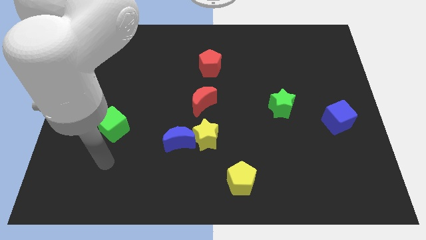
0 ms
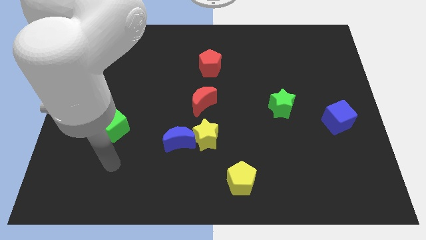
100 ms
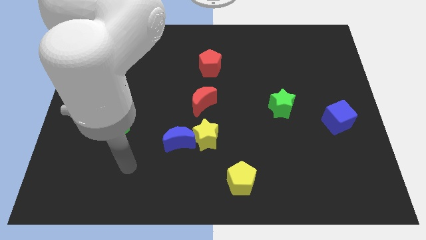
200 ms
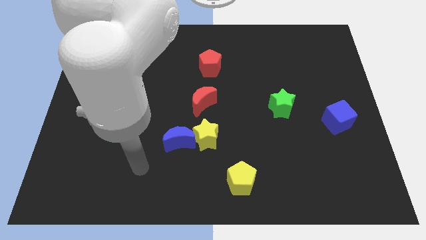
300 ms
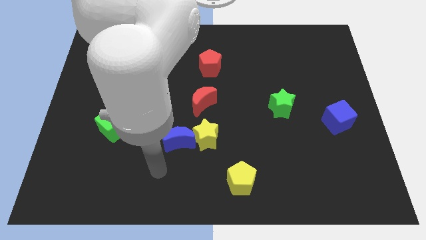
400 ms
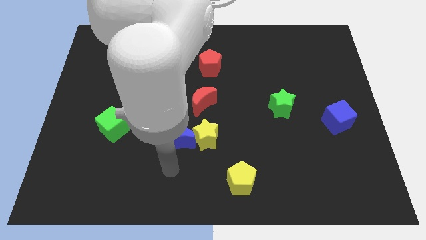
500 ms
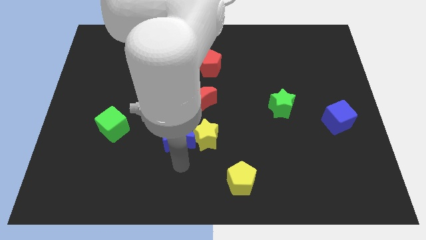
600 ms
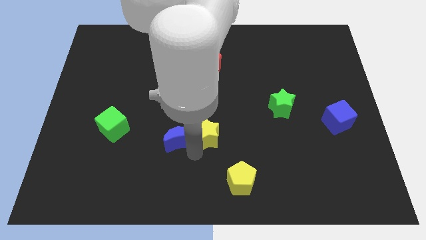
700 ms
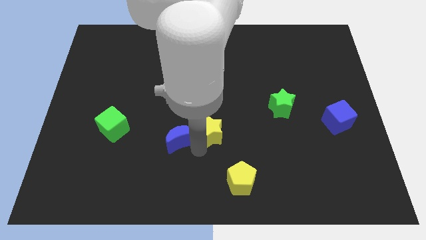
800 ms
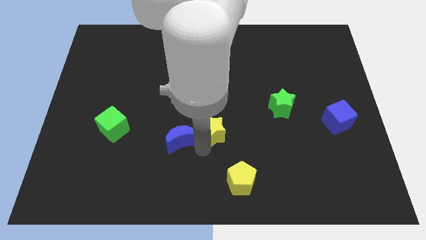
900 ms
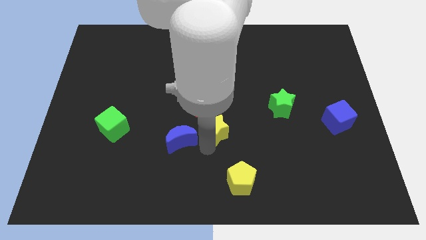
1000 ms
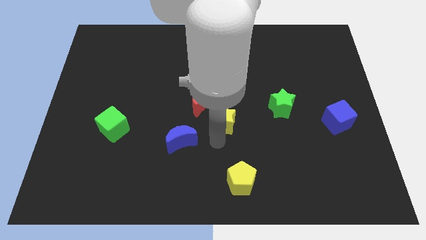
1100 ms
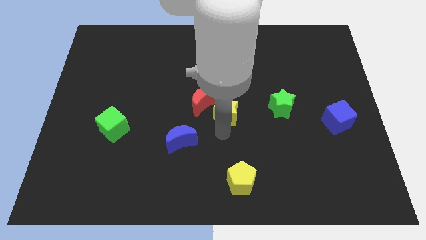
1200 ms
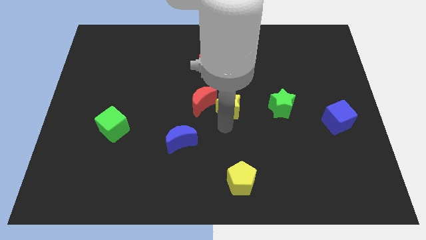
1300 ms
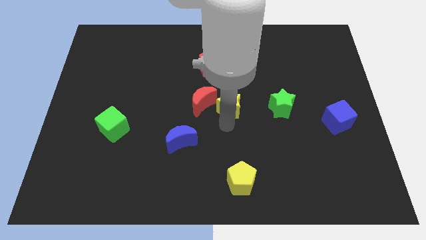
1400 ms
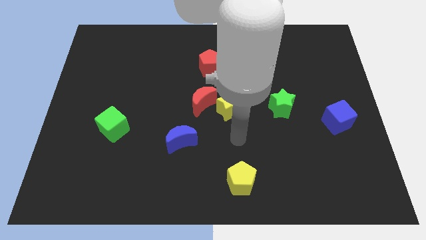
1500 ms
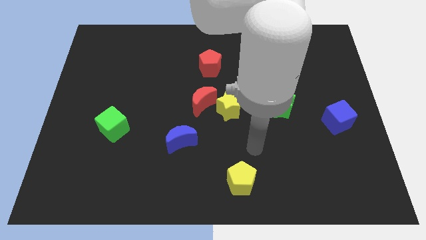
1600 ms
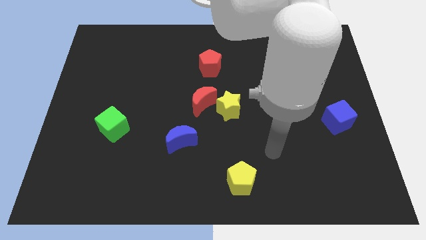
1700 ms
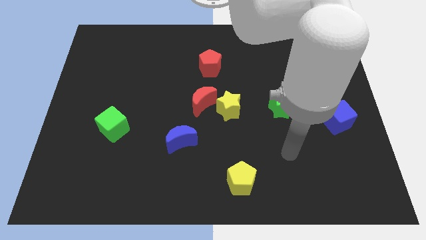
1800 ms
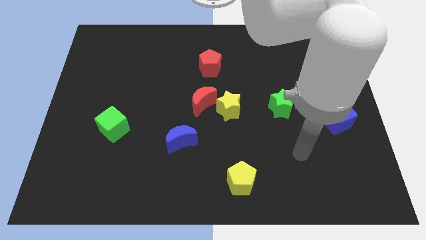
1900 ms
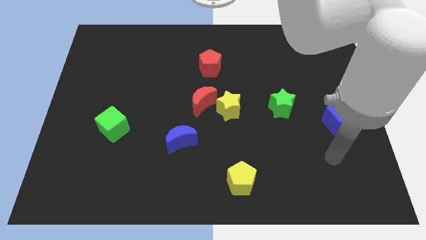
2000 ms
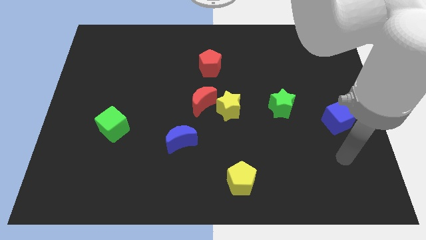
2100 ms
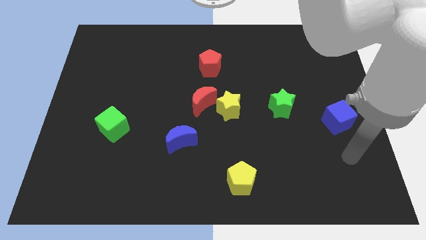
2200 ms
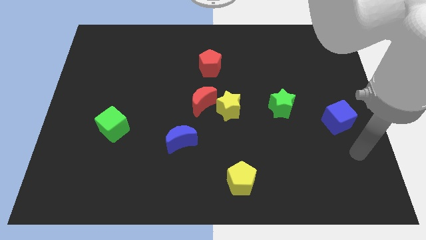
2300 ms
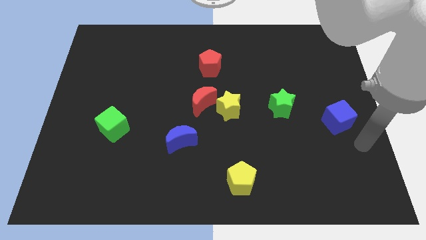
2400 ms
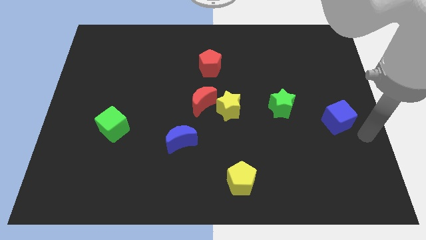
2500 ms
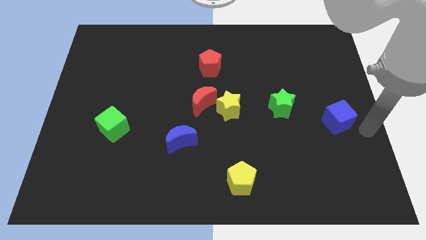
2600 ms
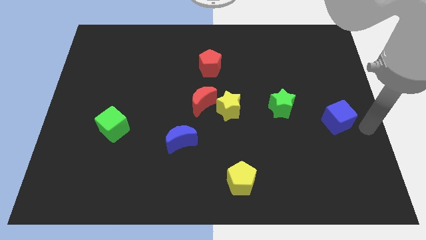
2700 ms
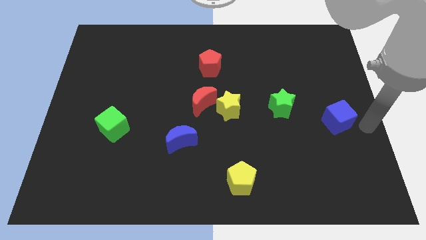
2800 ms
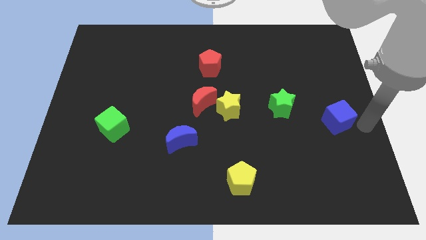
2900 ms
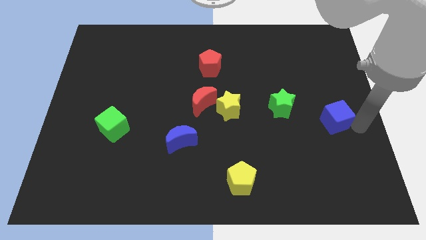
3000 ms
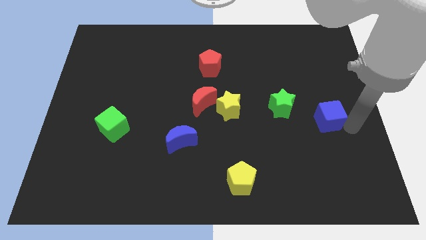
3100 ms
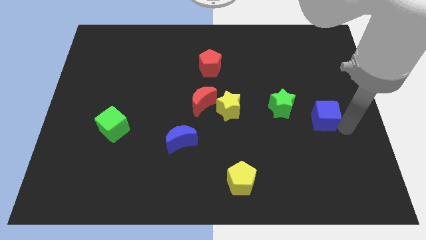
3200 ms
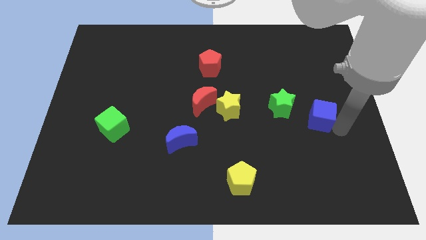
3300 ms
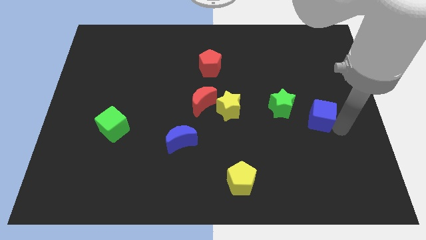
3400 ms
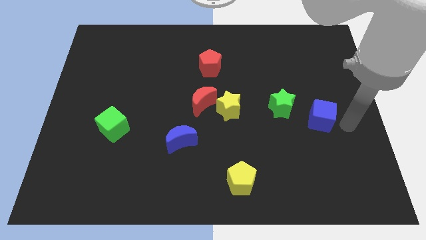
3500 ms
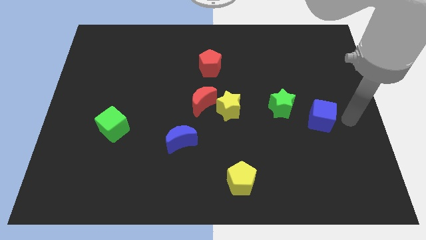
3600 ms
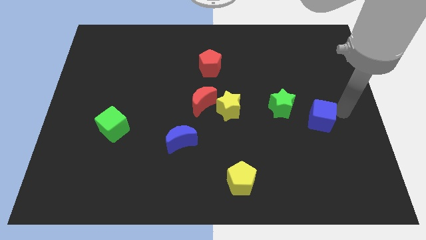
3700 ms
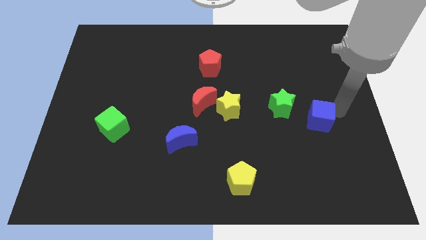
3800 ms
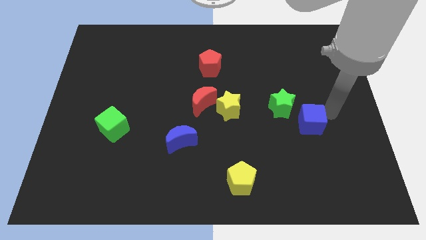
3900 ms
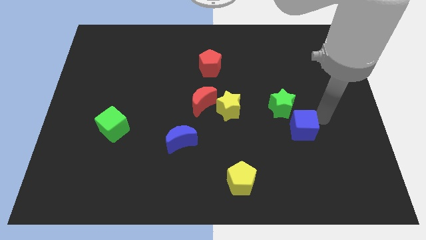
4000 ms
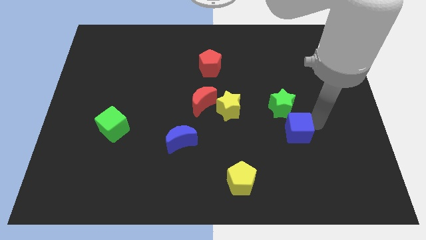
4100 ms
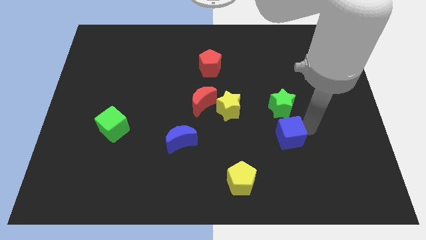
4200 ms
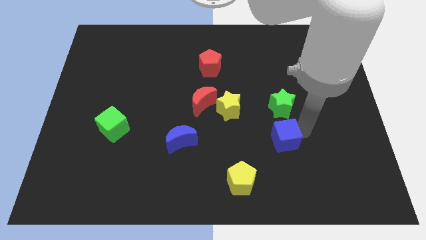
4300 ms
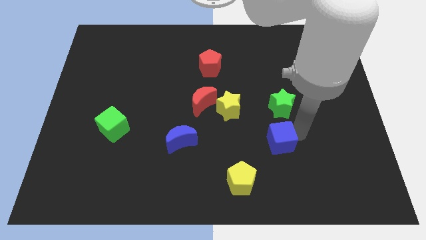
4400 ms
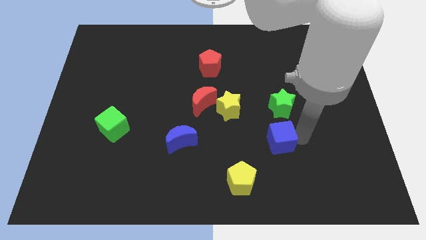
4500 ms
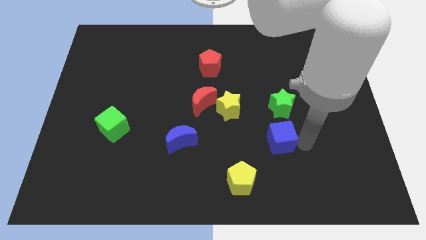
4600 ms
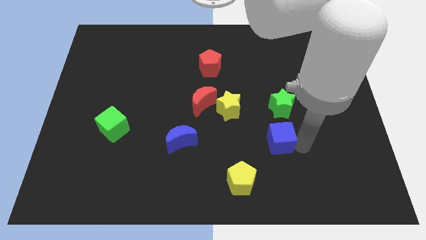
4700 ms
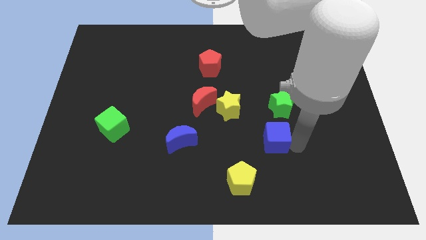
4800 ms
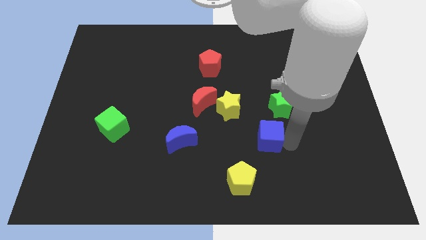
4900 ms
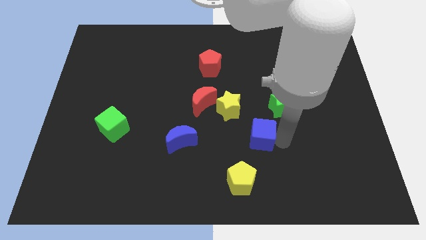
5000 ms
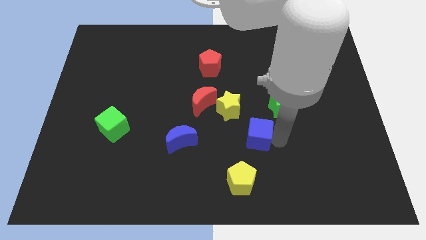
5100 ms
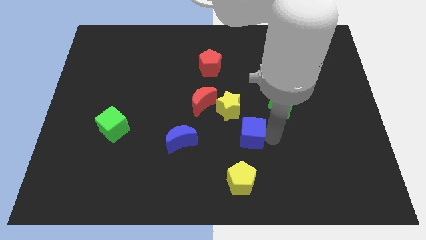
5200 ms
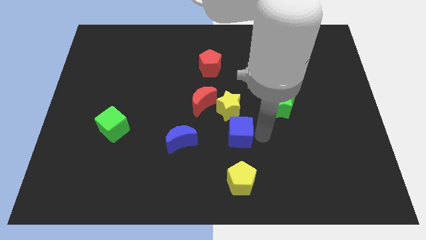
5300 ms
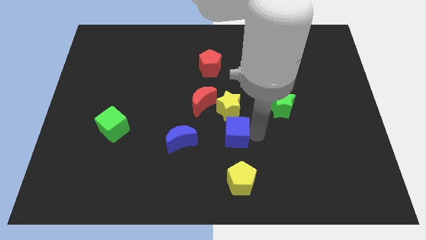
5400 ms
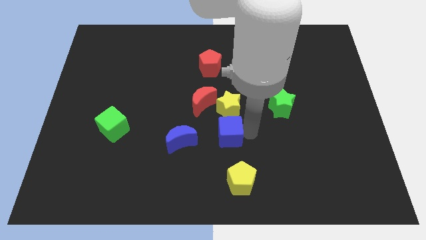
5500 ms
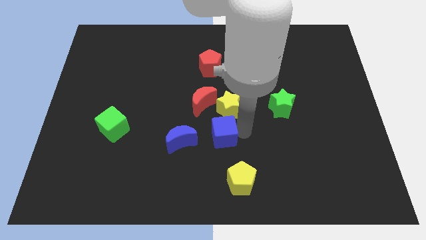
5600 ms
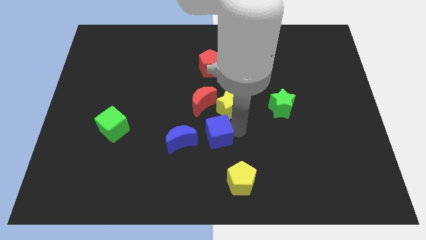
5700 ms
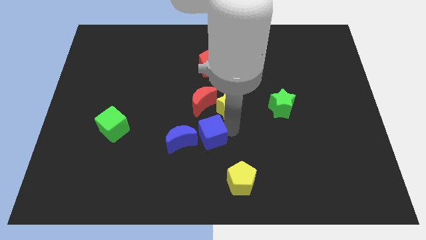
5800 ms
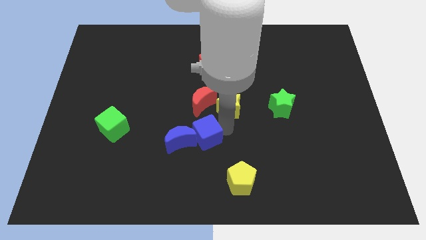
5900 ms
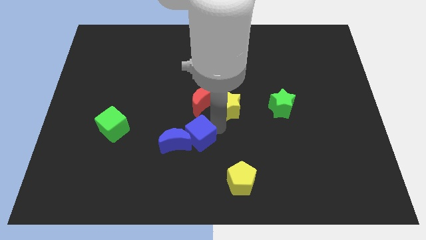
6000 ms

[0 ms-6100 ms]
move the blue cube next to the blue moon

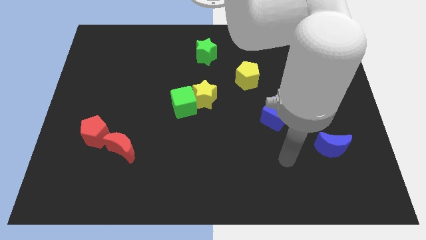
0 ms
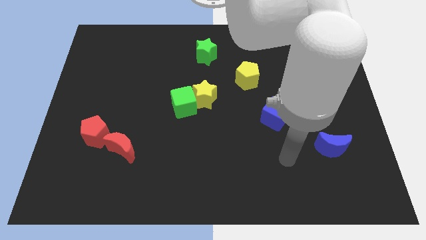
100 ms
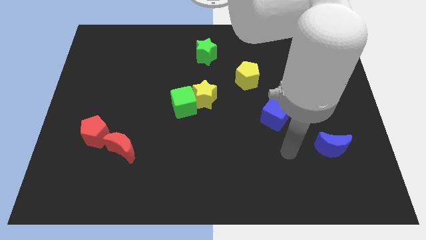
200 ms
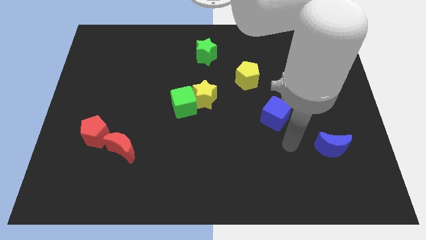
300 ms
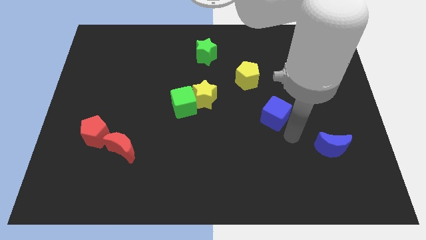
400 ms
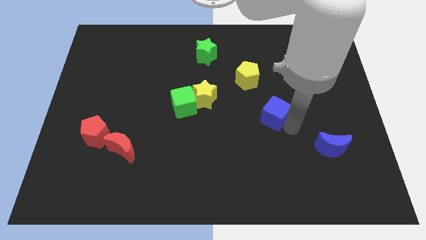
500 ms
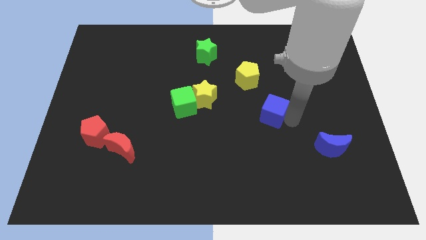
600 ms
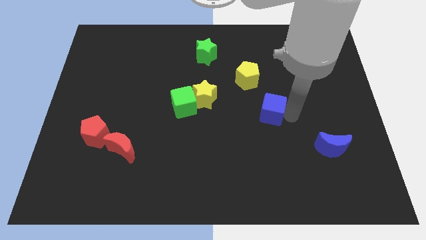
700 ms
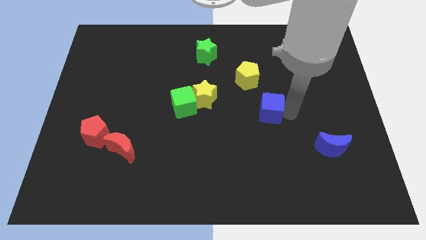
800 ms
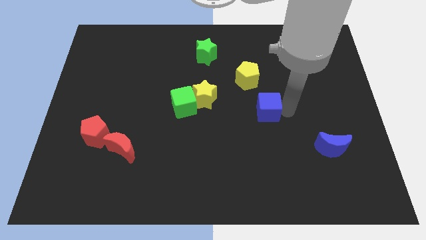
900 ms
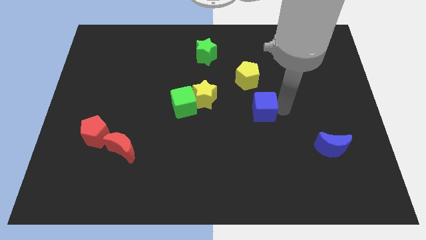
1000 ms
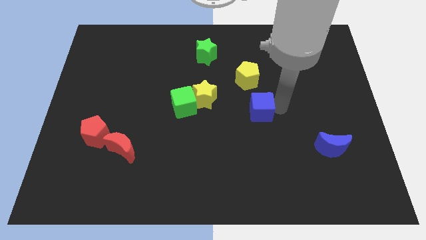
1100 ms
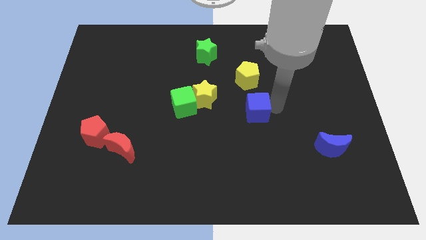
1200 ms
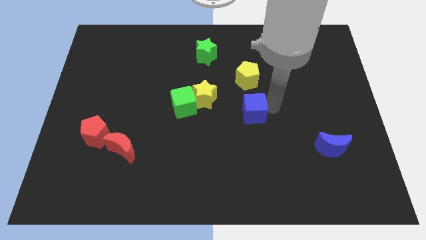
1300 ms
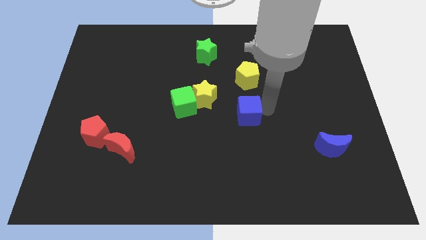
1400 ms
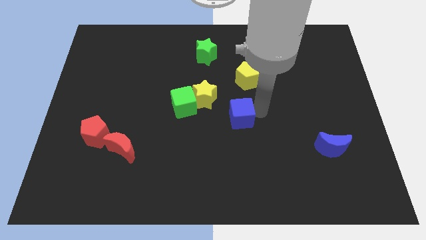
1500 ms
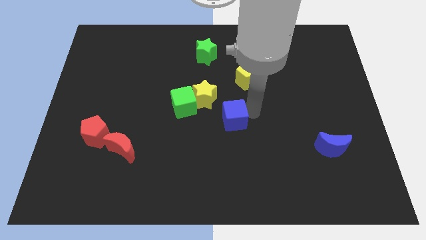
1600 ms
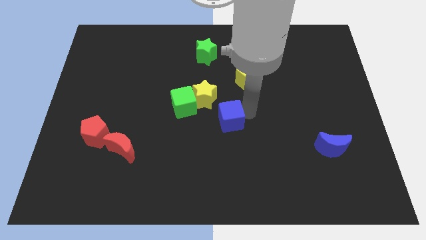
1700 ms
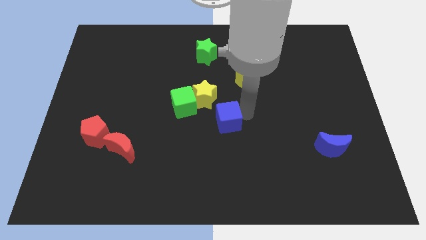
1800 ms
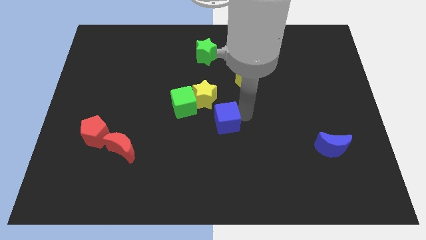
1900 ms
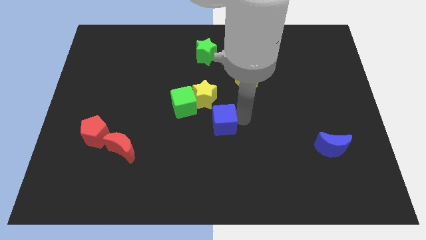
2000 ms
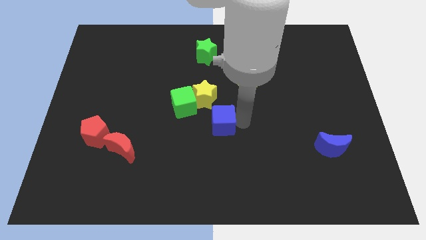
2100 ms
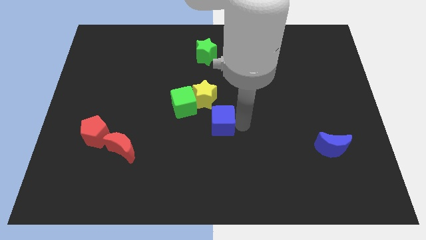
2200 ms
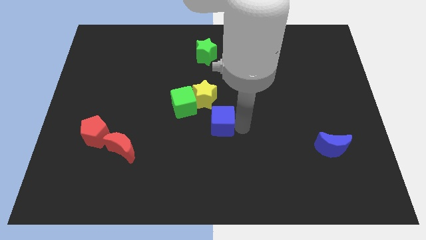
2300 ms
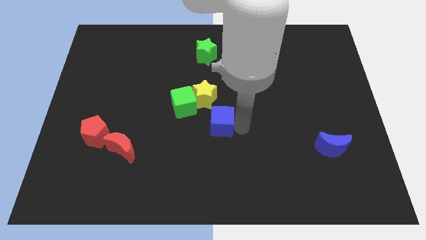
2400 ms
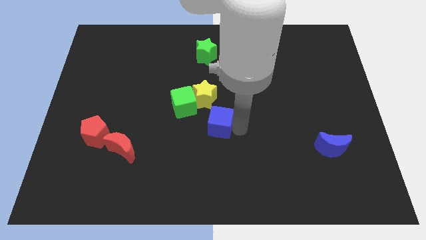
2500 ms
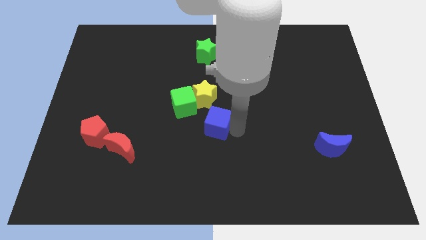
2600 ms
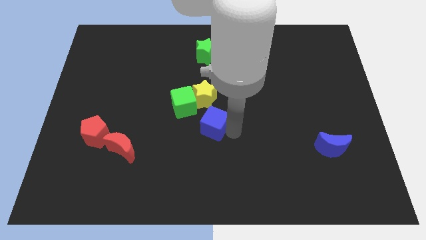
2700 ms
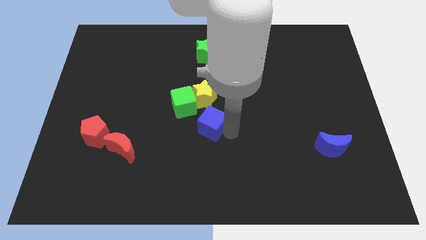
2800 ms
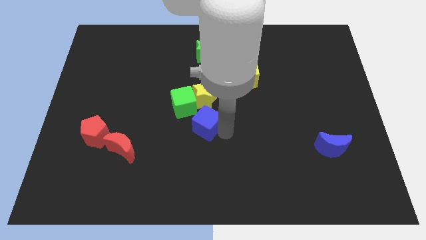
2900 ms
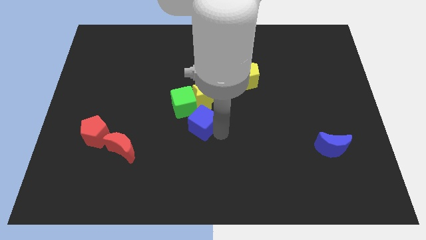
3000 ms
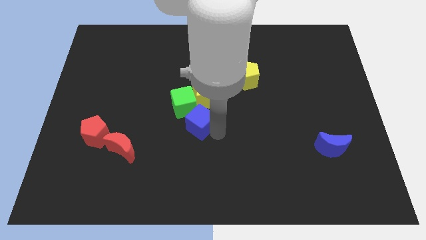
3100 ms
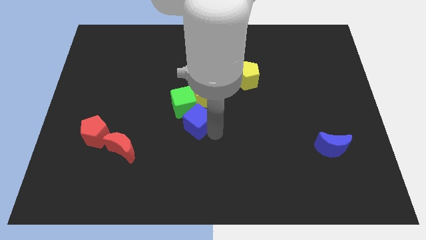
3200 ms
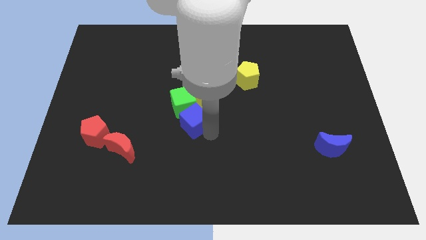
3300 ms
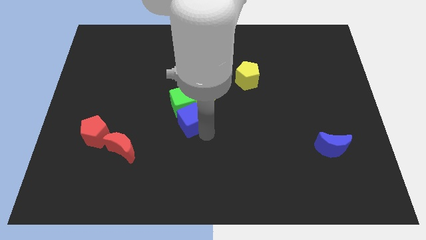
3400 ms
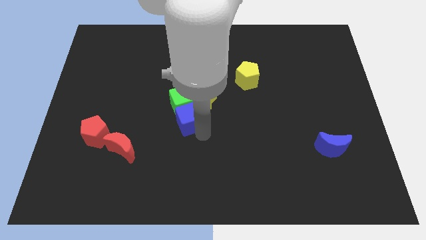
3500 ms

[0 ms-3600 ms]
put the blue cube next to the green cube
